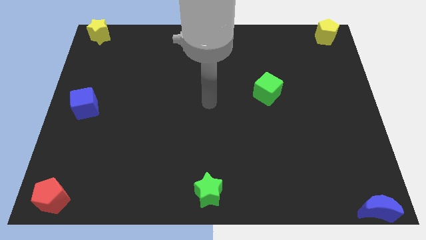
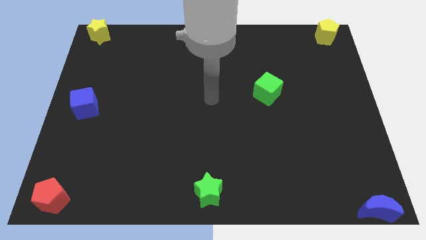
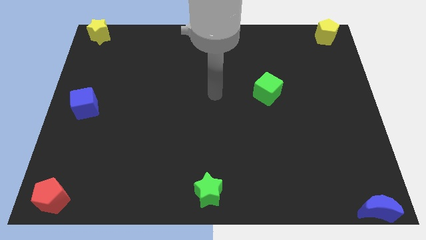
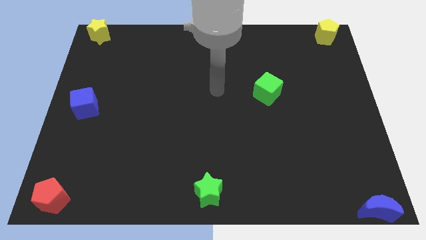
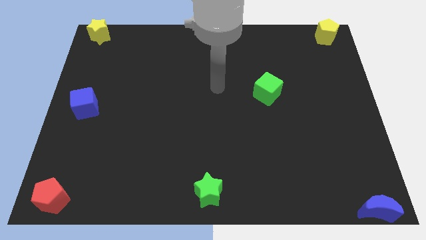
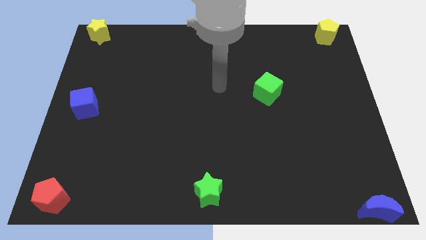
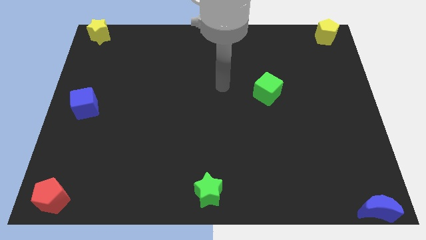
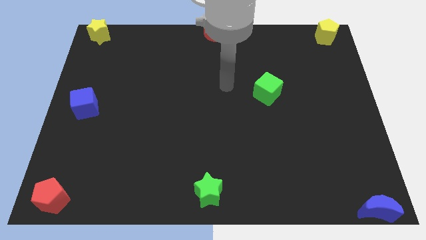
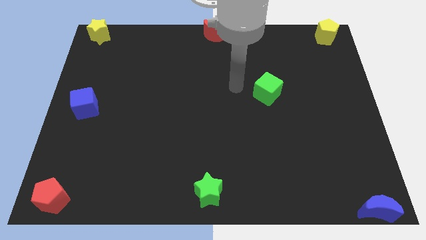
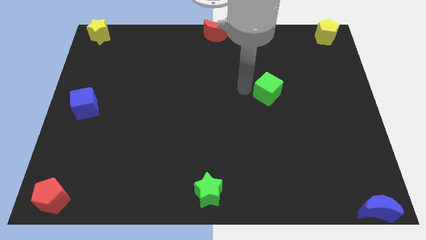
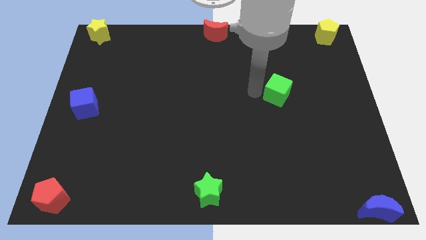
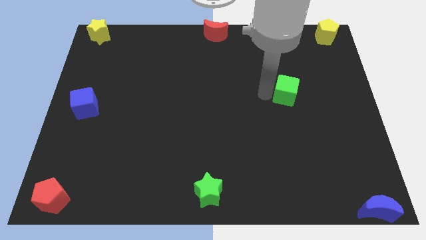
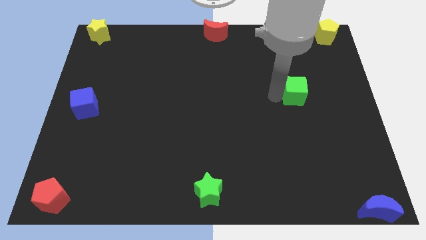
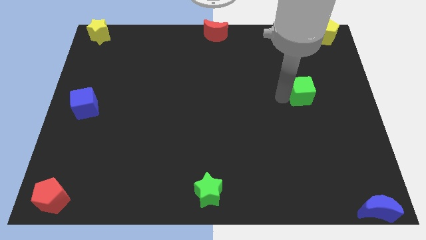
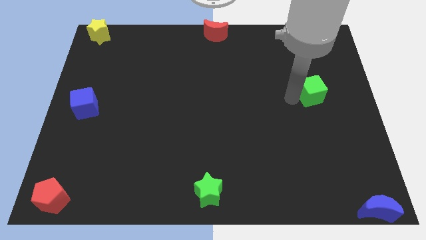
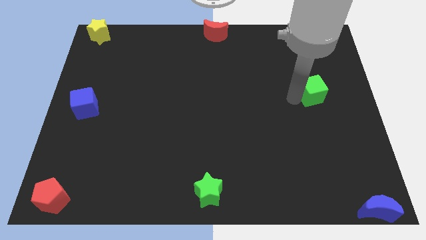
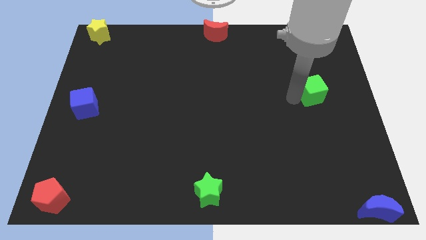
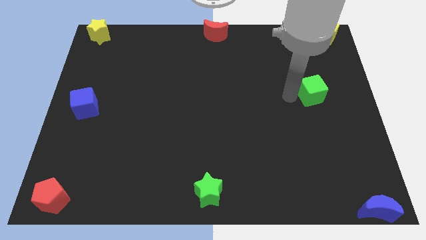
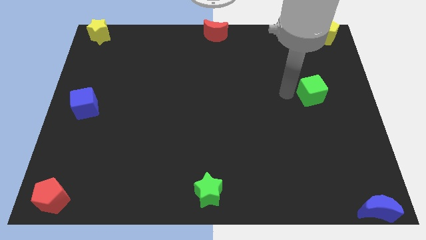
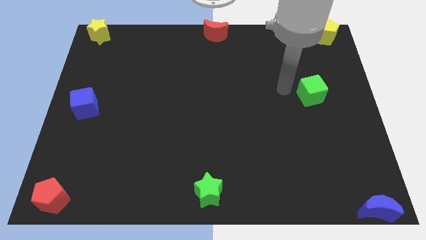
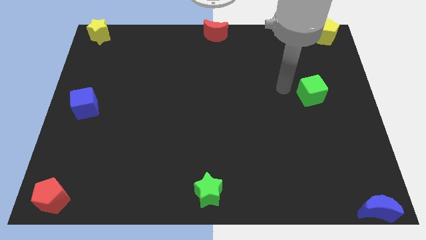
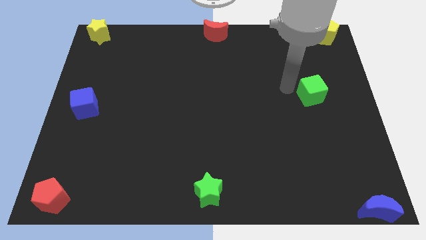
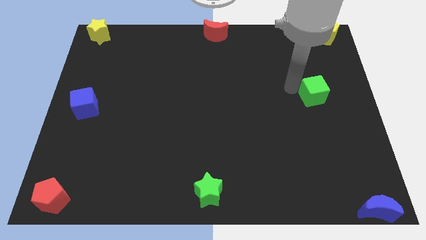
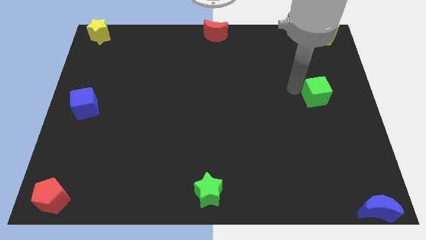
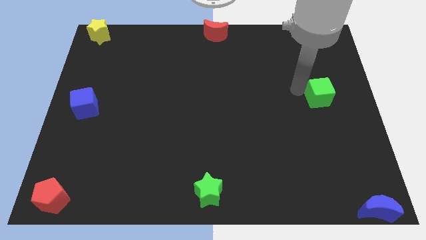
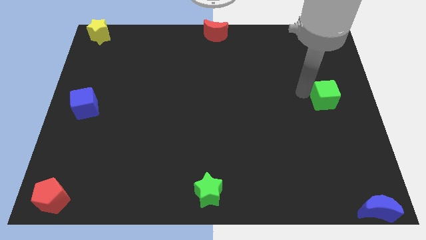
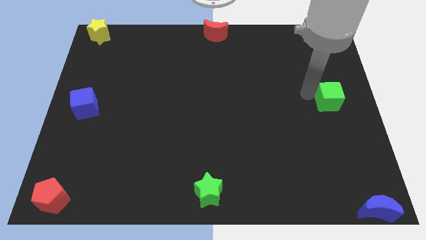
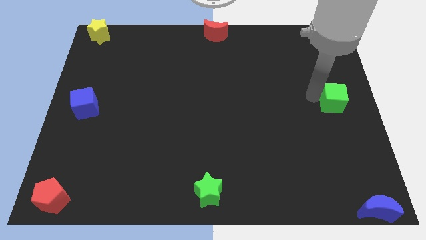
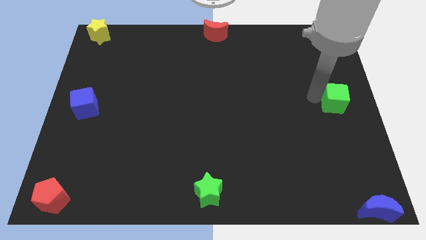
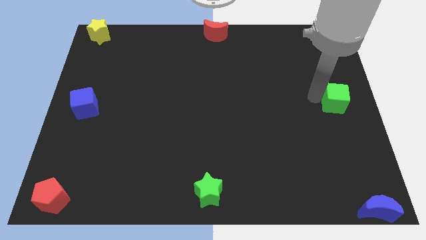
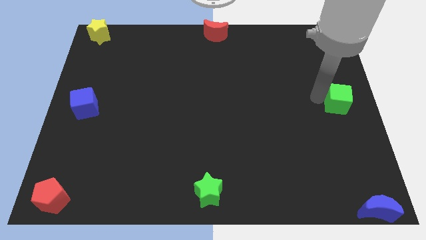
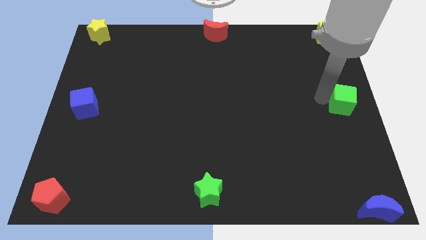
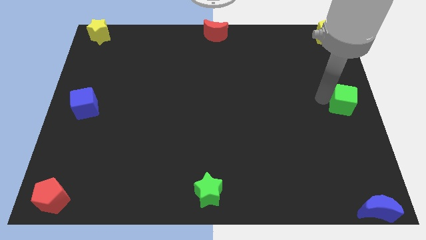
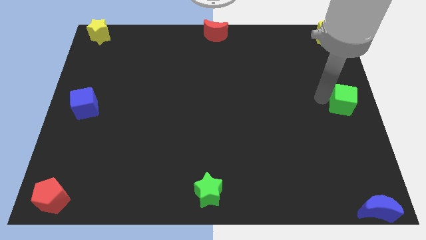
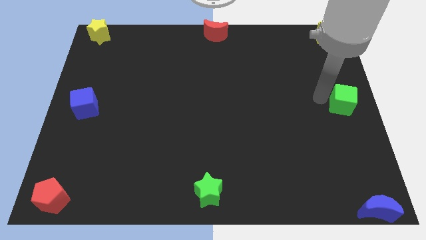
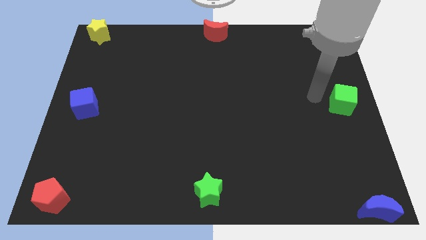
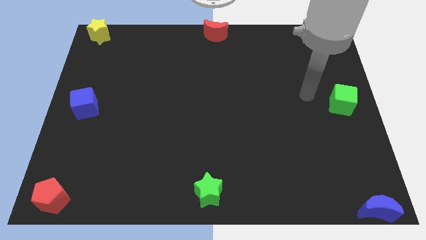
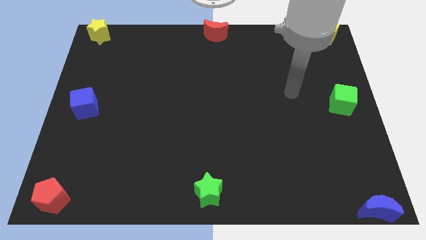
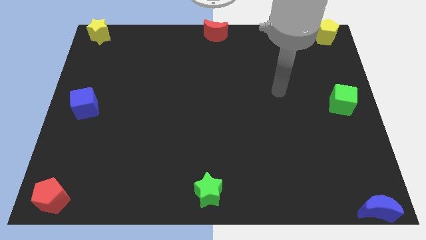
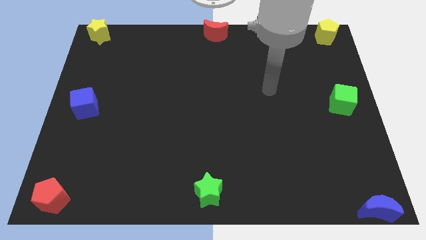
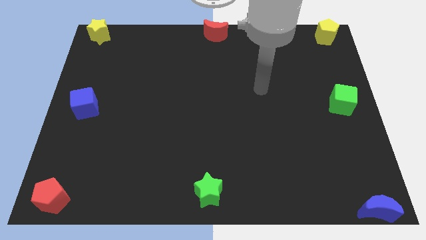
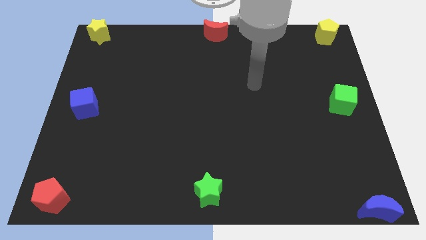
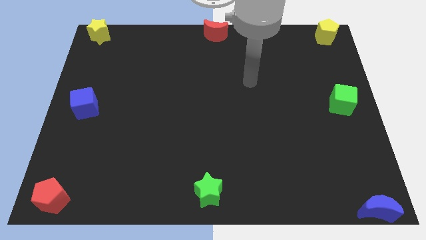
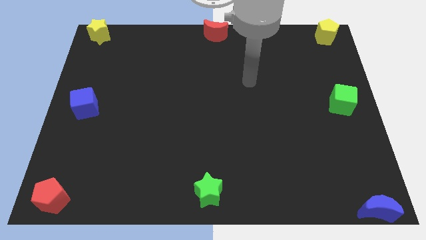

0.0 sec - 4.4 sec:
move the green cube to the right middle of the board

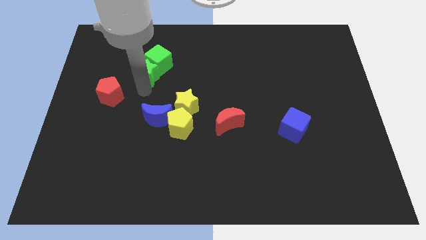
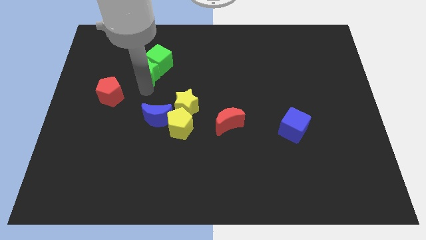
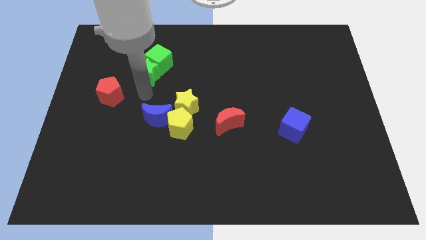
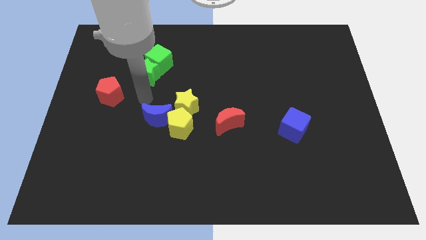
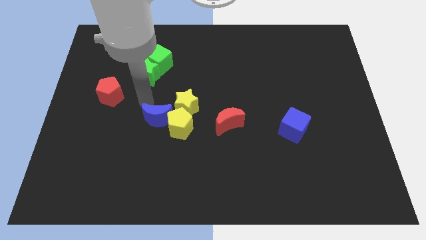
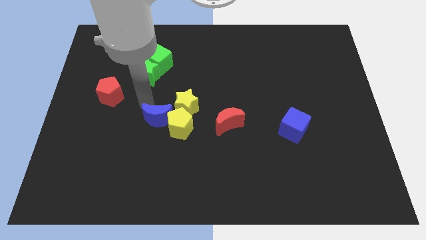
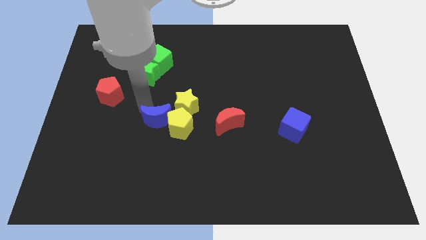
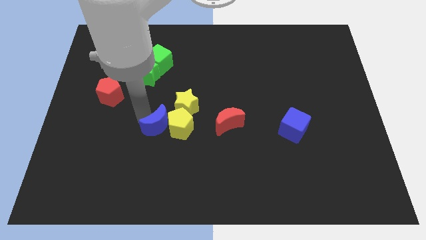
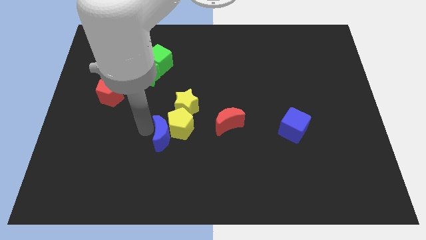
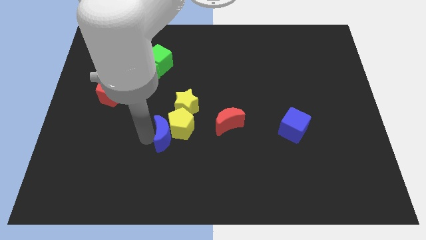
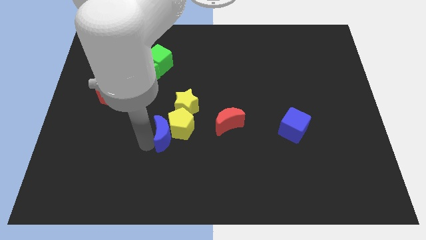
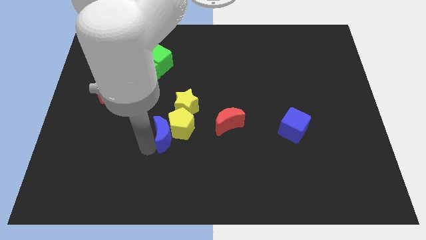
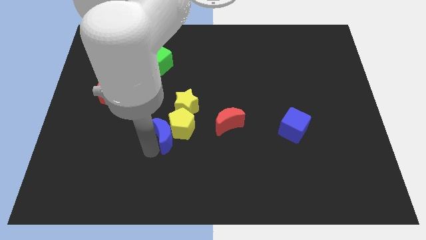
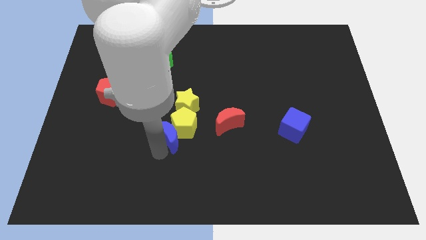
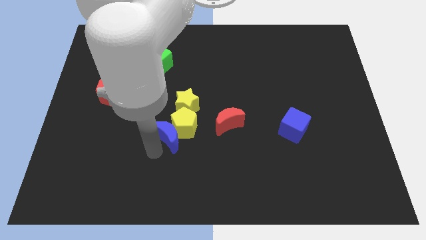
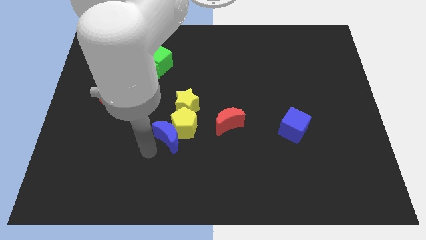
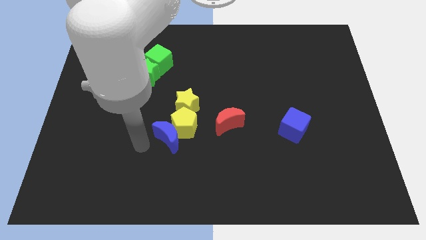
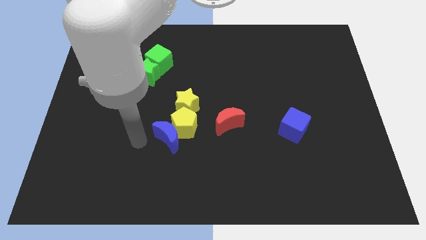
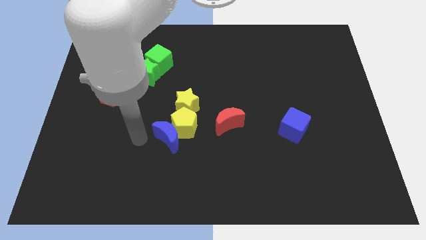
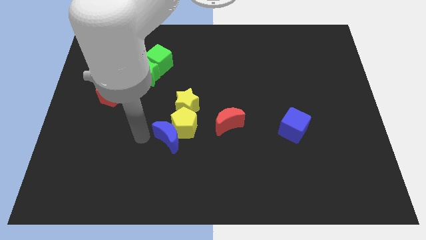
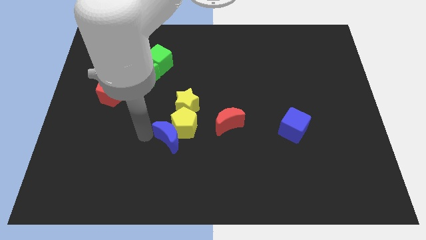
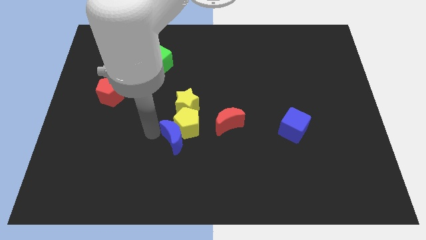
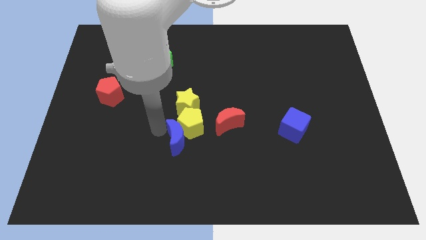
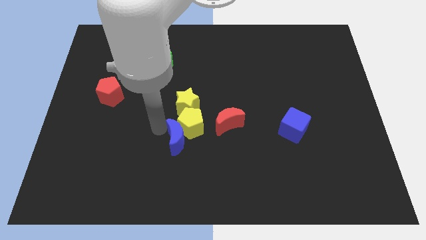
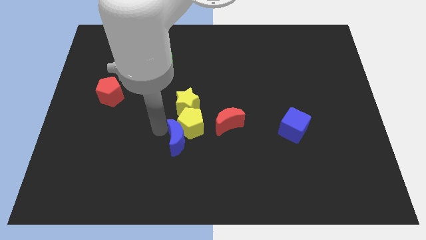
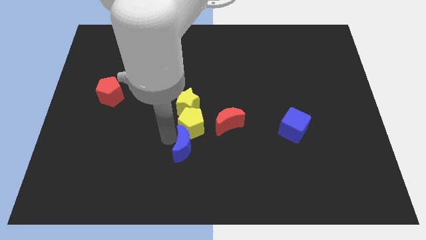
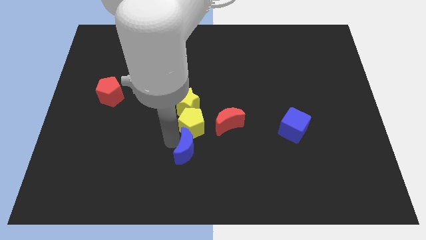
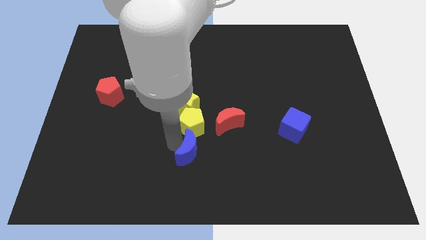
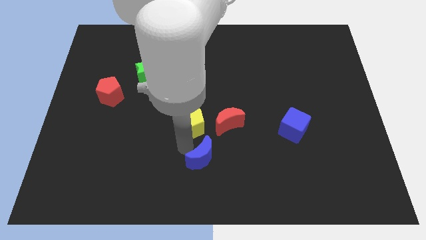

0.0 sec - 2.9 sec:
place blue moon to the bottom of the yellow pentagon

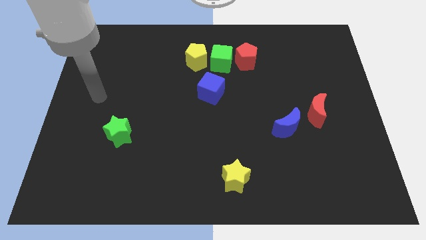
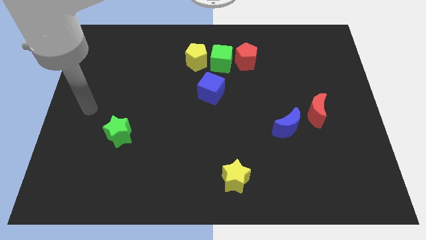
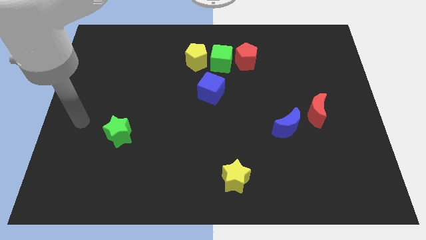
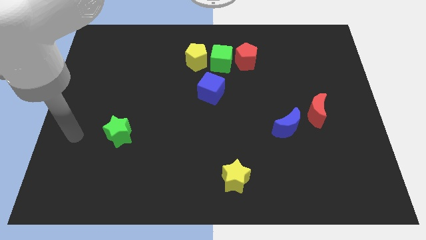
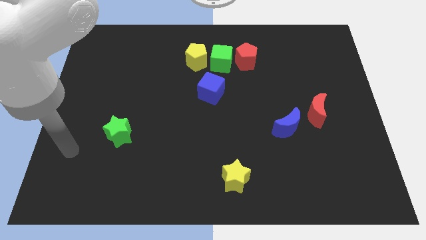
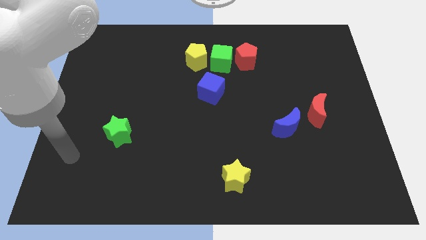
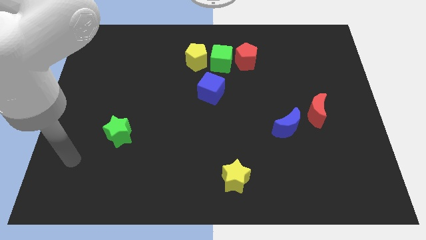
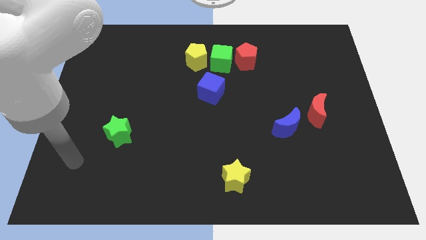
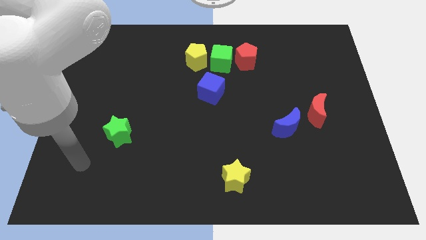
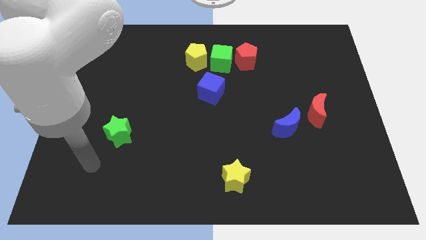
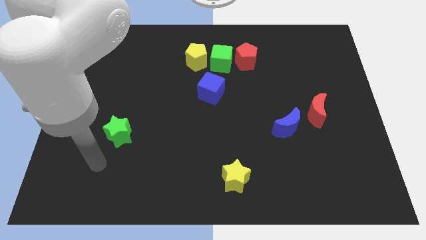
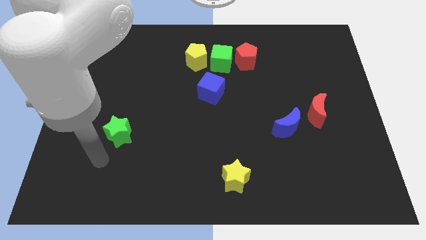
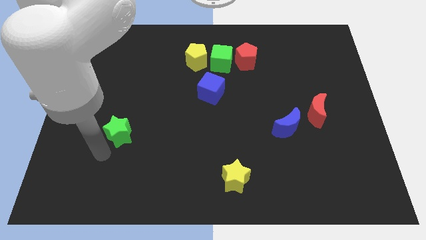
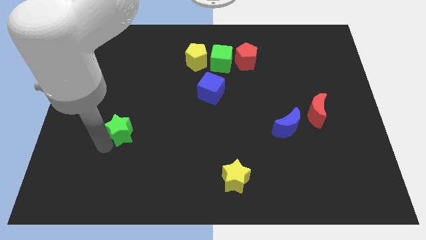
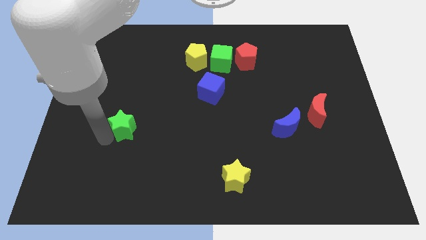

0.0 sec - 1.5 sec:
move your arm to the bottom of green star
